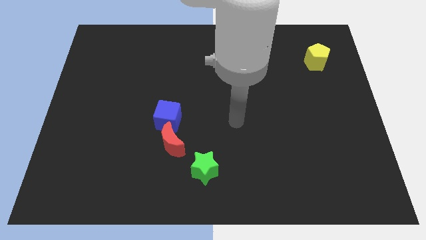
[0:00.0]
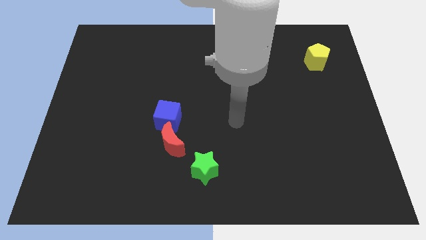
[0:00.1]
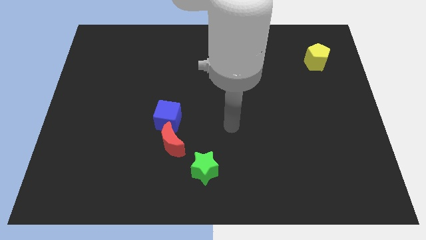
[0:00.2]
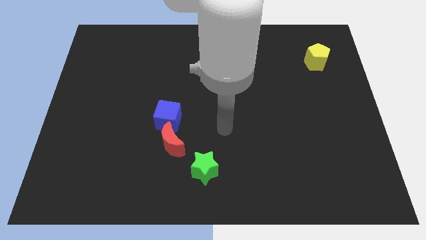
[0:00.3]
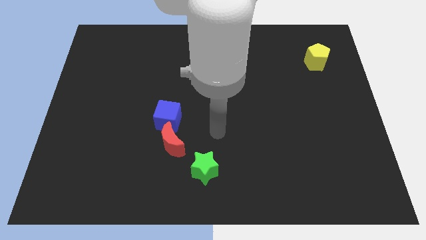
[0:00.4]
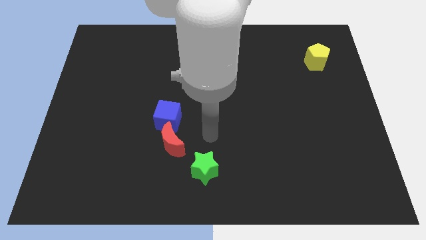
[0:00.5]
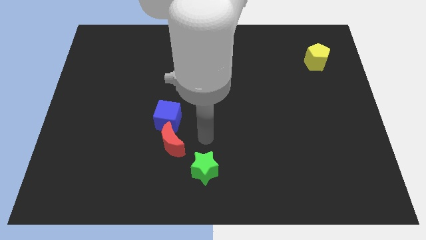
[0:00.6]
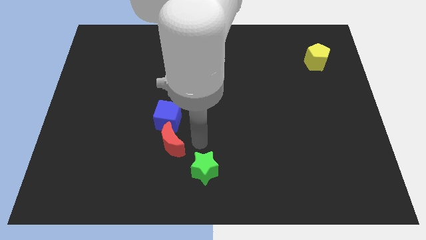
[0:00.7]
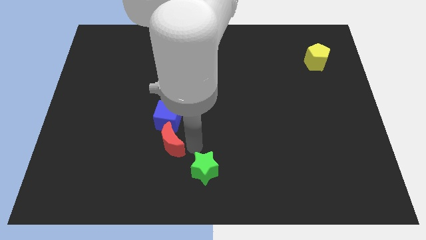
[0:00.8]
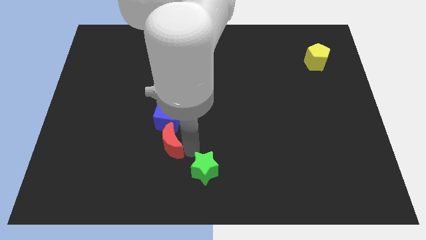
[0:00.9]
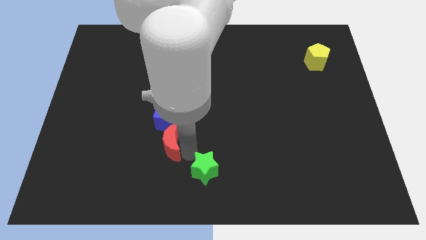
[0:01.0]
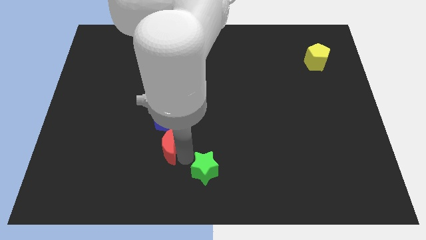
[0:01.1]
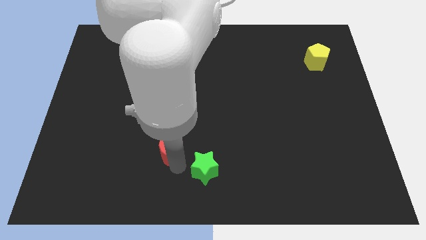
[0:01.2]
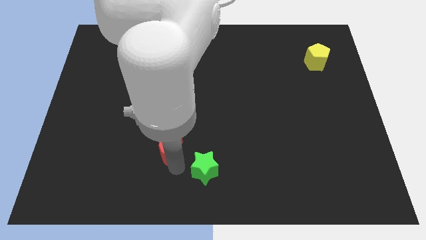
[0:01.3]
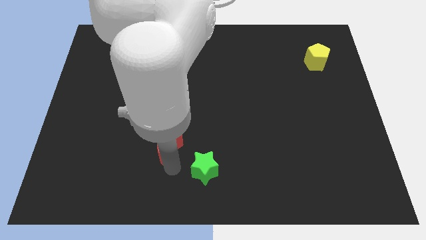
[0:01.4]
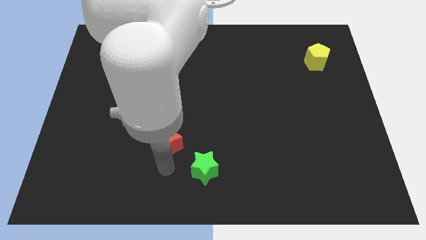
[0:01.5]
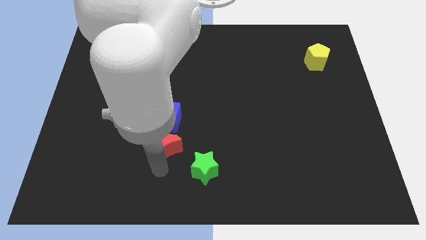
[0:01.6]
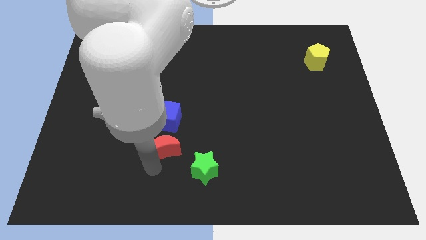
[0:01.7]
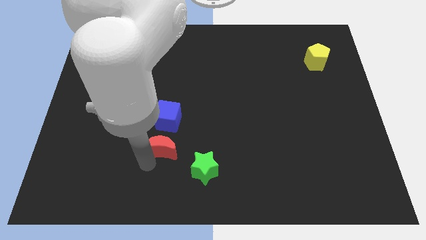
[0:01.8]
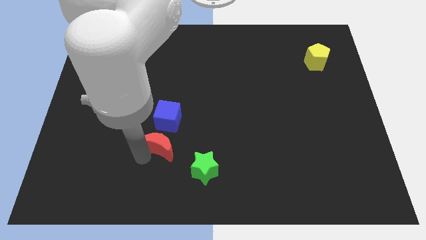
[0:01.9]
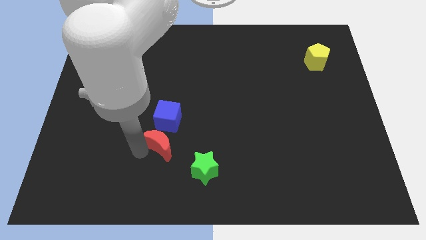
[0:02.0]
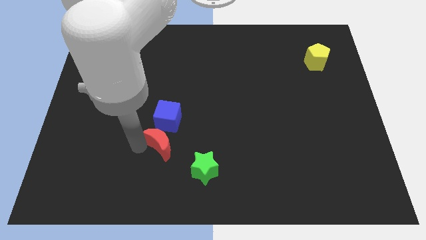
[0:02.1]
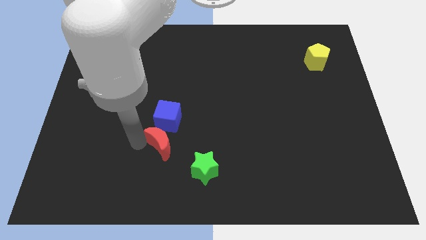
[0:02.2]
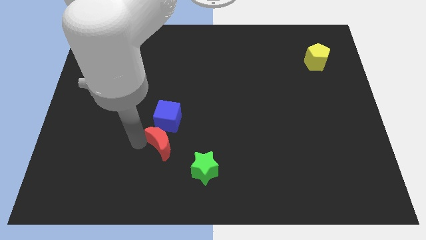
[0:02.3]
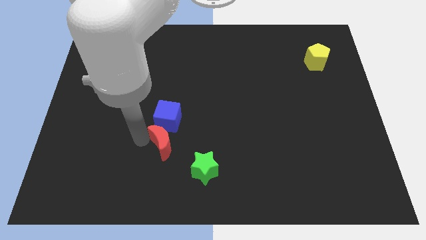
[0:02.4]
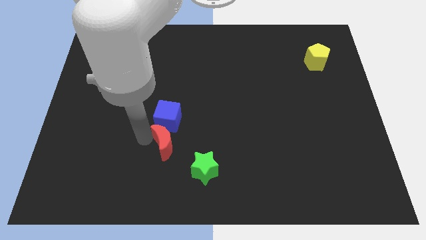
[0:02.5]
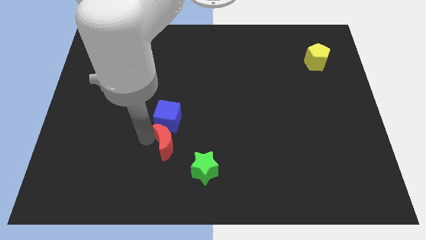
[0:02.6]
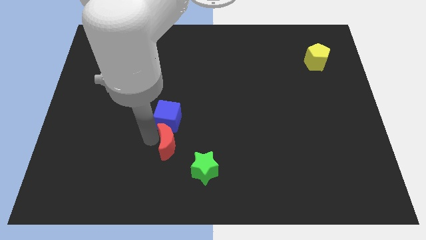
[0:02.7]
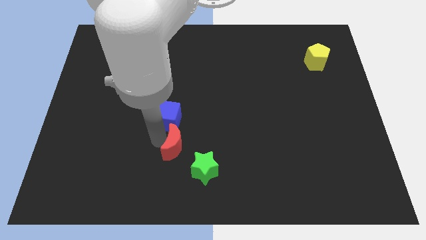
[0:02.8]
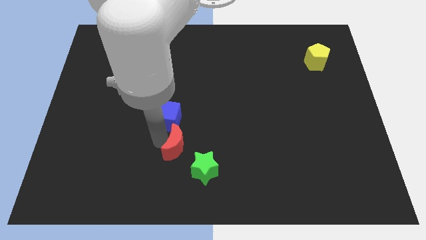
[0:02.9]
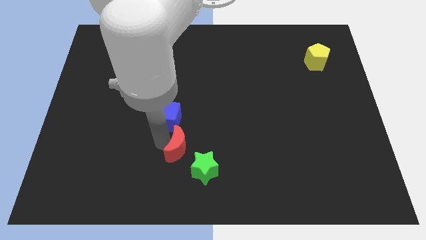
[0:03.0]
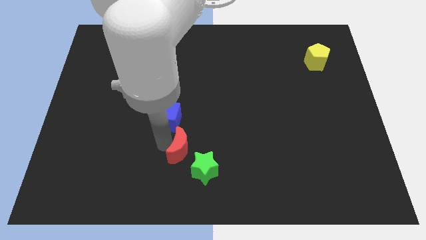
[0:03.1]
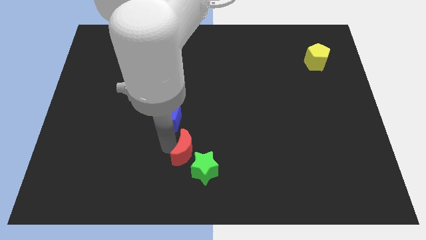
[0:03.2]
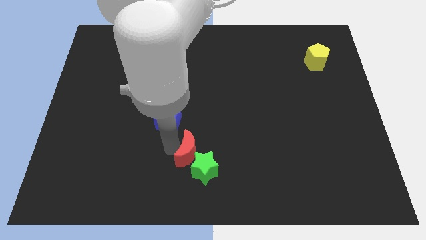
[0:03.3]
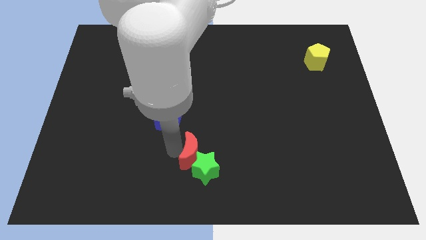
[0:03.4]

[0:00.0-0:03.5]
move the red moon towards the green block

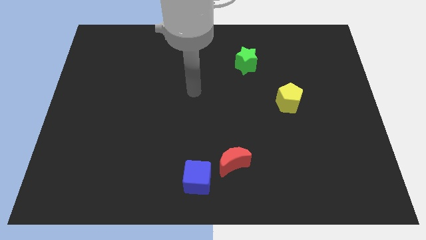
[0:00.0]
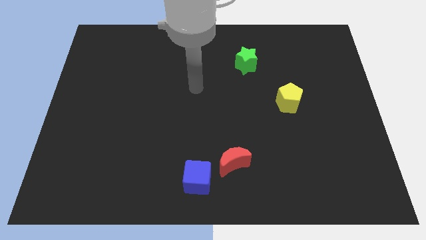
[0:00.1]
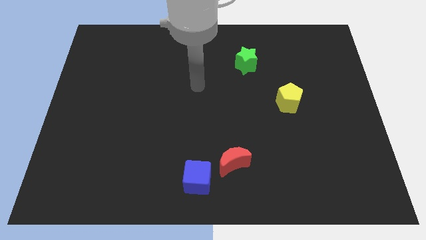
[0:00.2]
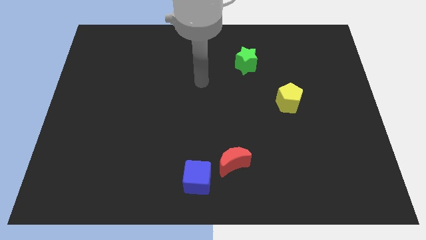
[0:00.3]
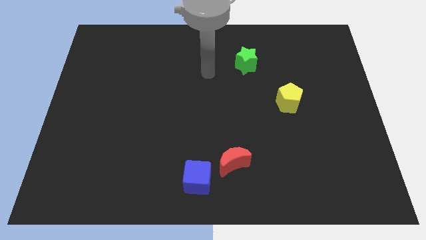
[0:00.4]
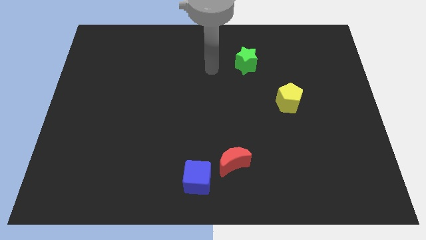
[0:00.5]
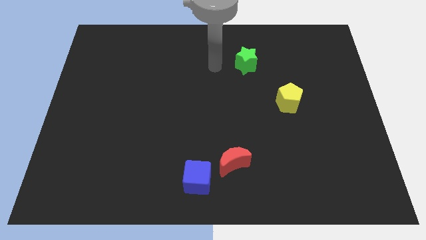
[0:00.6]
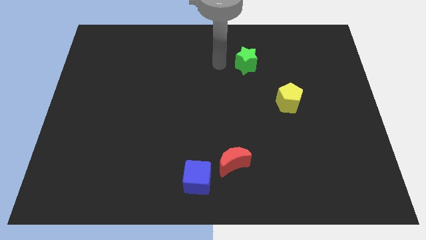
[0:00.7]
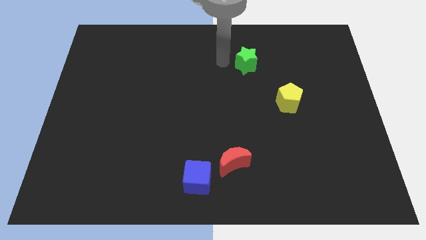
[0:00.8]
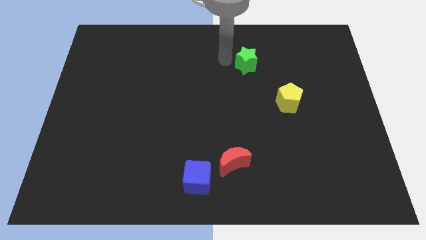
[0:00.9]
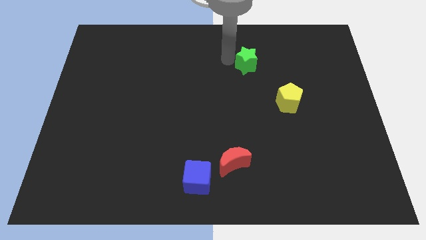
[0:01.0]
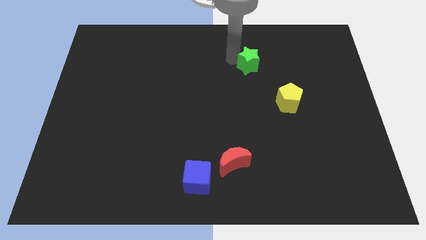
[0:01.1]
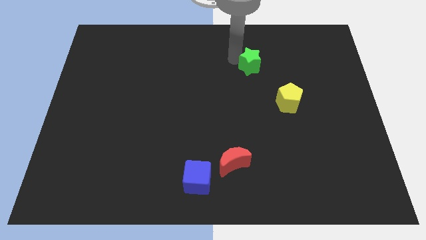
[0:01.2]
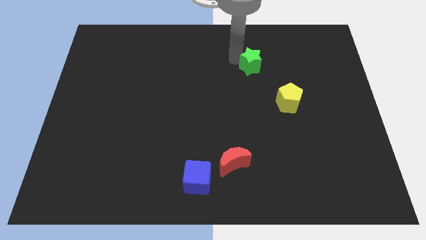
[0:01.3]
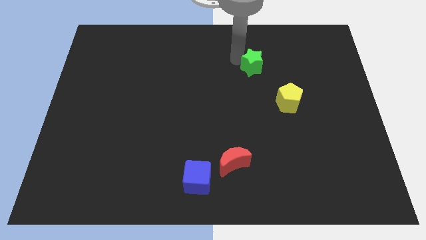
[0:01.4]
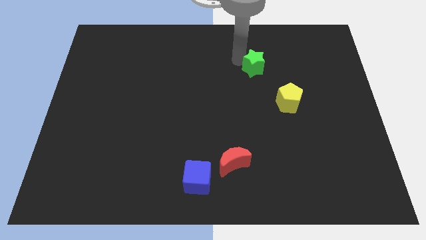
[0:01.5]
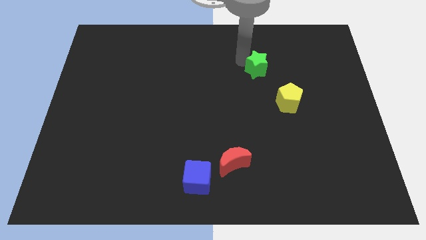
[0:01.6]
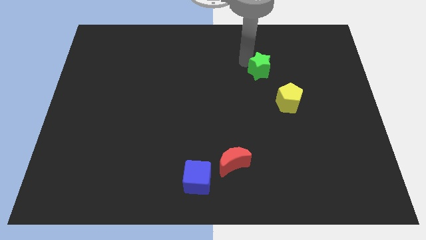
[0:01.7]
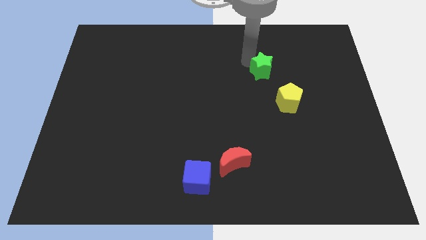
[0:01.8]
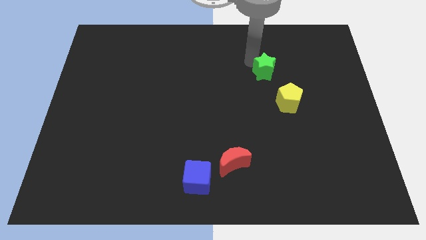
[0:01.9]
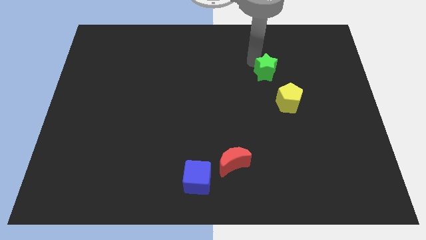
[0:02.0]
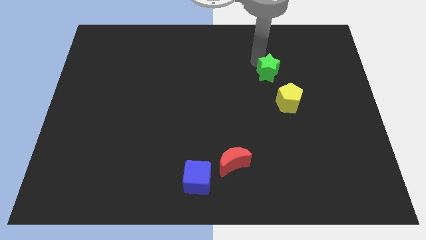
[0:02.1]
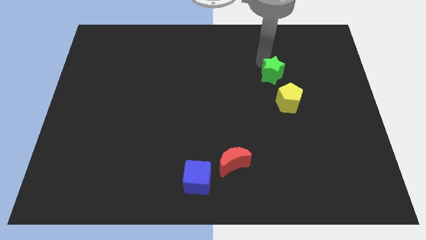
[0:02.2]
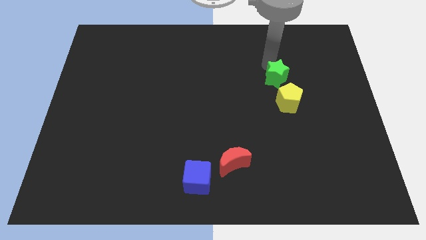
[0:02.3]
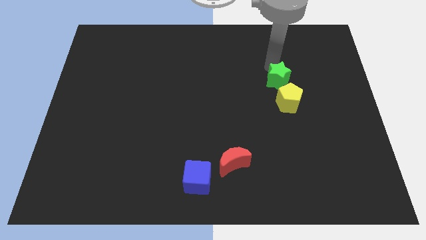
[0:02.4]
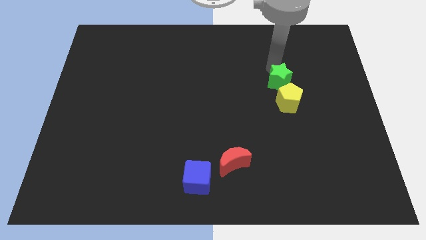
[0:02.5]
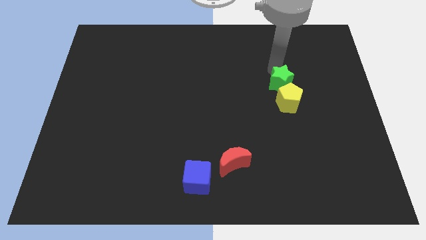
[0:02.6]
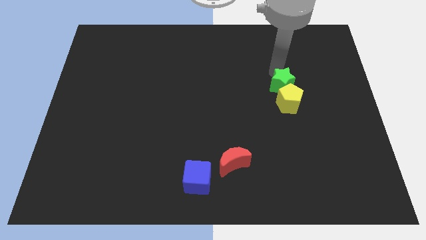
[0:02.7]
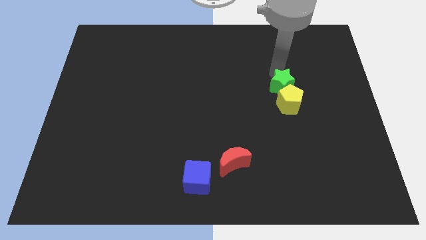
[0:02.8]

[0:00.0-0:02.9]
put the green block close to the pentagon

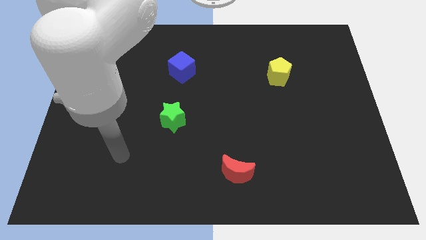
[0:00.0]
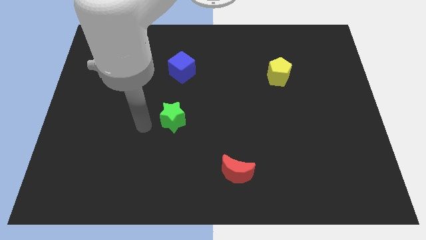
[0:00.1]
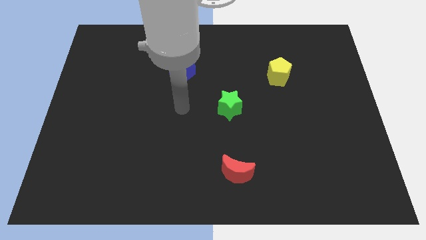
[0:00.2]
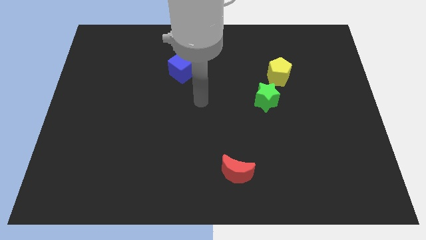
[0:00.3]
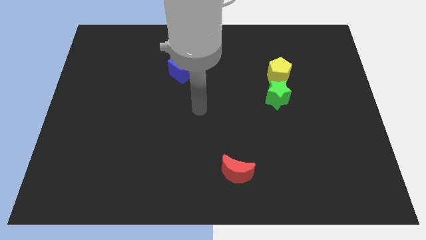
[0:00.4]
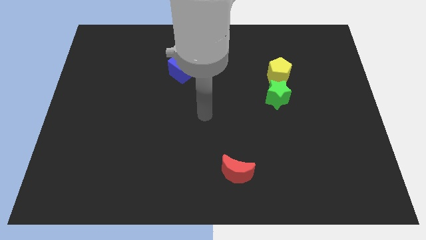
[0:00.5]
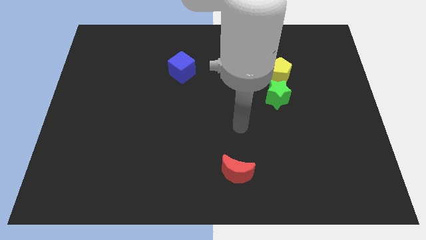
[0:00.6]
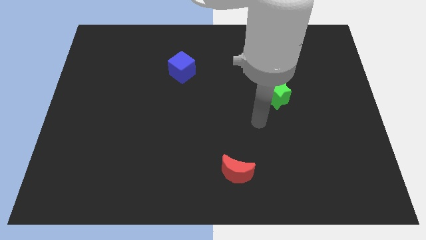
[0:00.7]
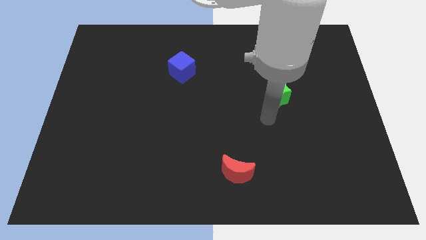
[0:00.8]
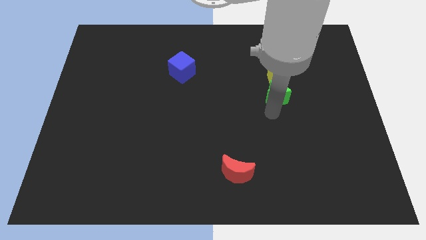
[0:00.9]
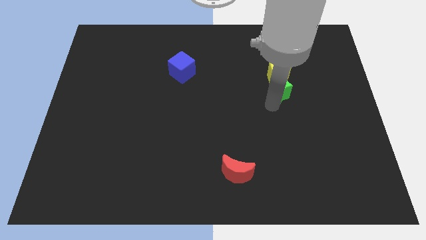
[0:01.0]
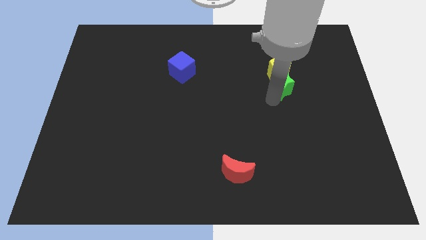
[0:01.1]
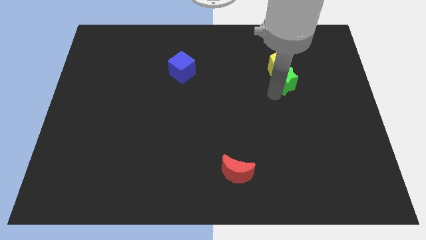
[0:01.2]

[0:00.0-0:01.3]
slide the green star to the pentagon

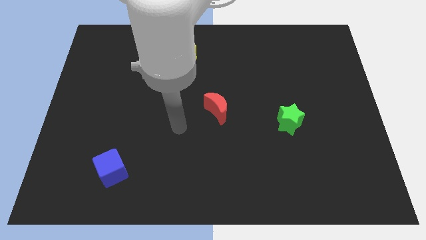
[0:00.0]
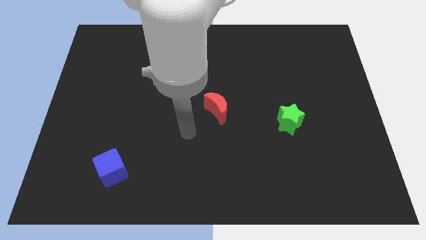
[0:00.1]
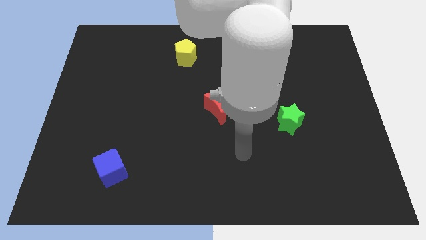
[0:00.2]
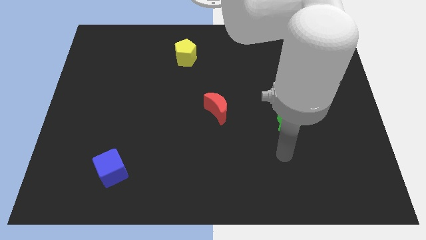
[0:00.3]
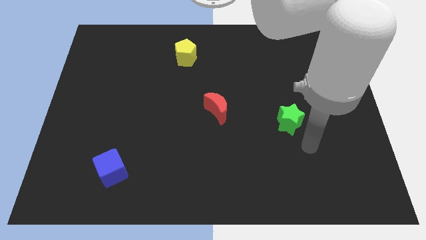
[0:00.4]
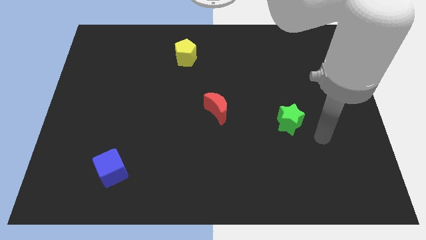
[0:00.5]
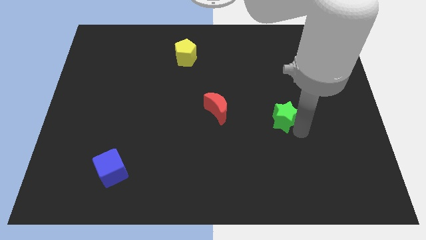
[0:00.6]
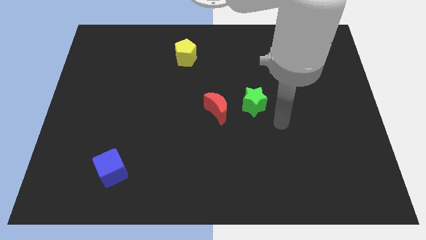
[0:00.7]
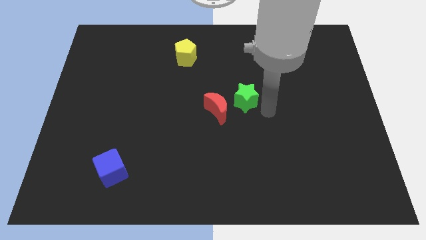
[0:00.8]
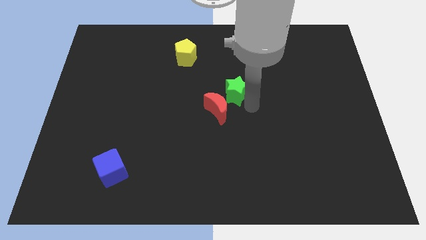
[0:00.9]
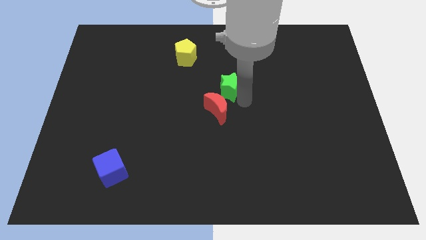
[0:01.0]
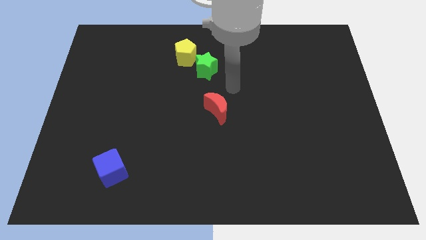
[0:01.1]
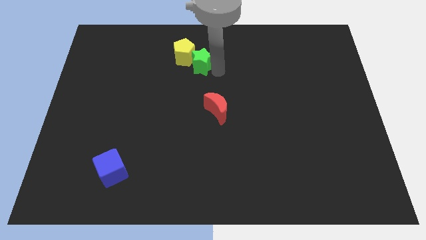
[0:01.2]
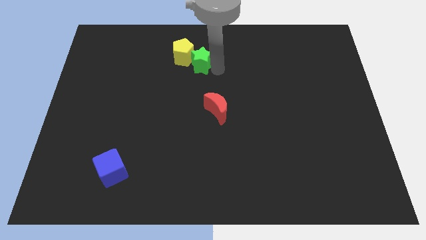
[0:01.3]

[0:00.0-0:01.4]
slide the pentagon towards the green block
